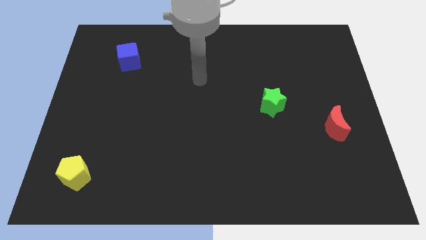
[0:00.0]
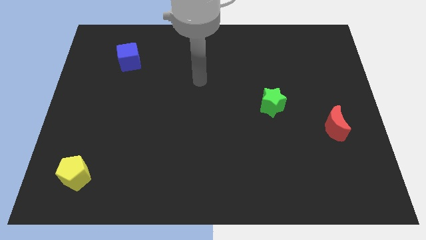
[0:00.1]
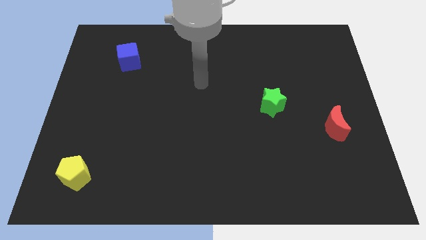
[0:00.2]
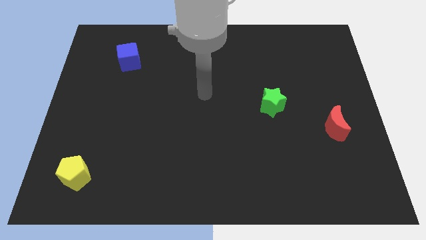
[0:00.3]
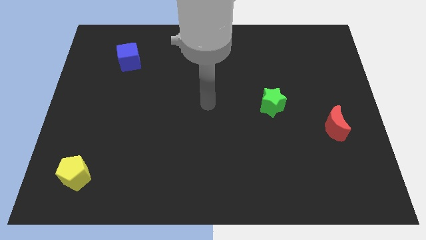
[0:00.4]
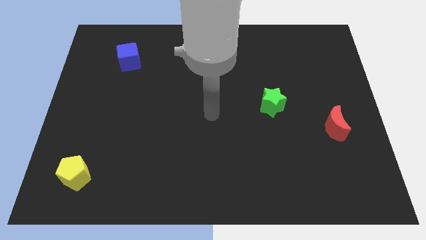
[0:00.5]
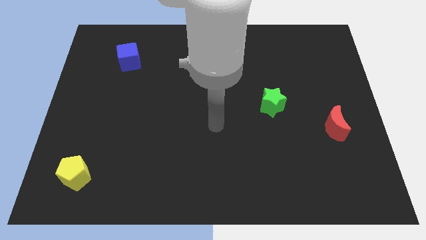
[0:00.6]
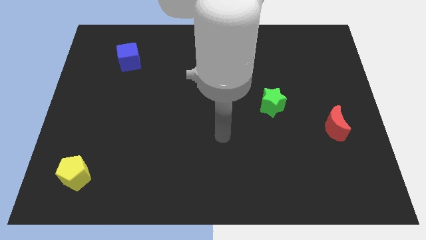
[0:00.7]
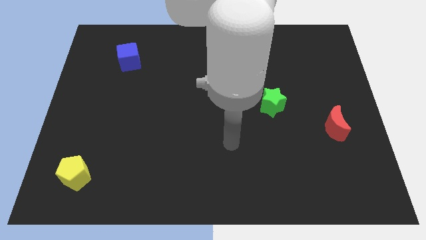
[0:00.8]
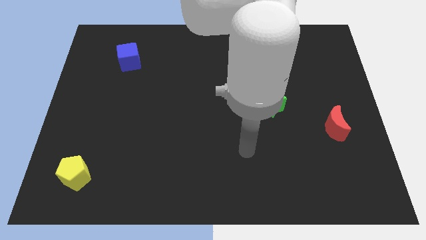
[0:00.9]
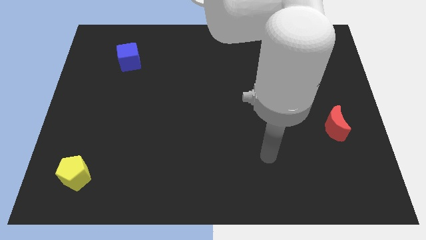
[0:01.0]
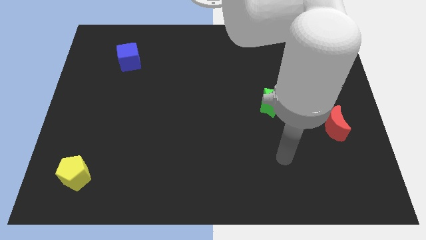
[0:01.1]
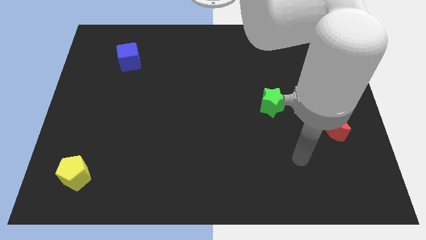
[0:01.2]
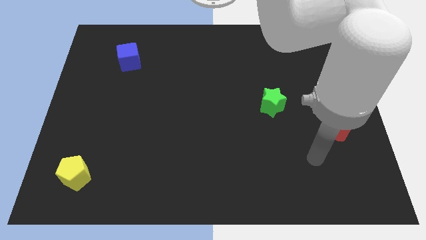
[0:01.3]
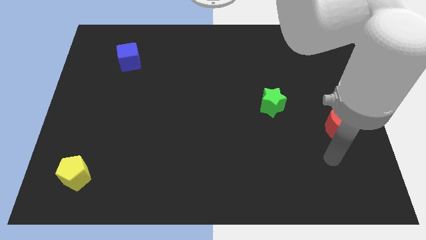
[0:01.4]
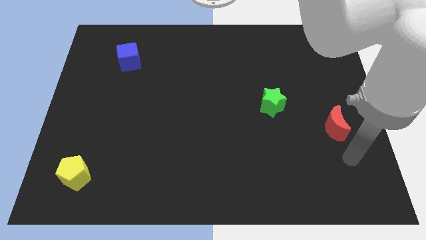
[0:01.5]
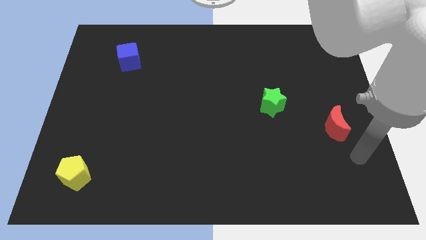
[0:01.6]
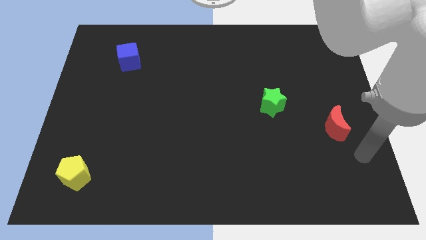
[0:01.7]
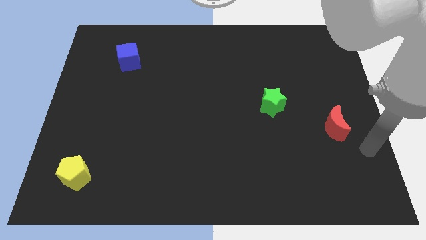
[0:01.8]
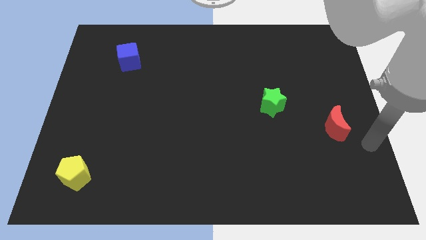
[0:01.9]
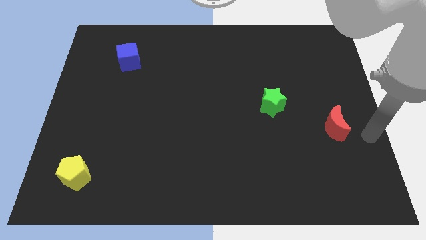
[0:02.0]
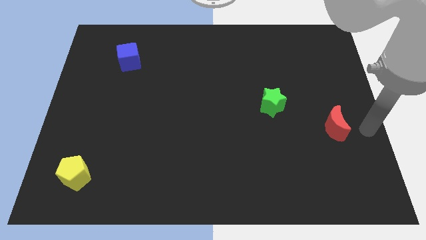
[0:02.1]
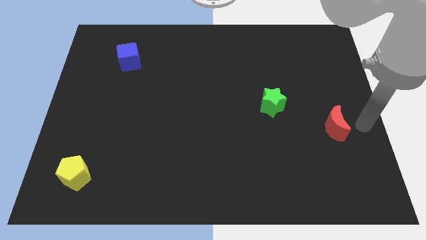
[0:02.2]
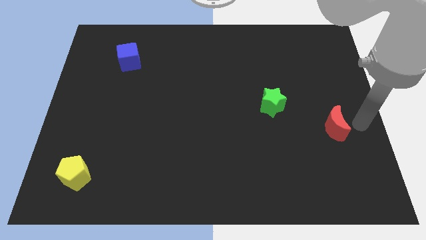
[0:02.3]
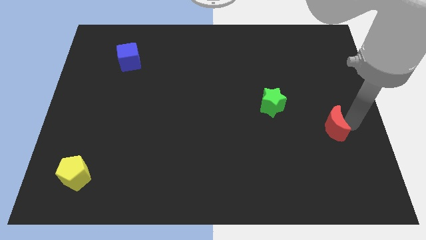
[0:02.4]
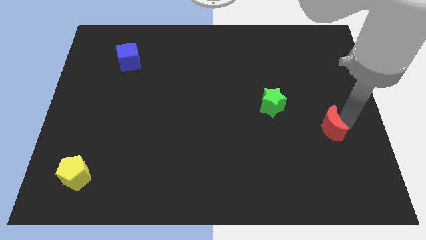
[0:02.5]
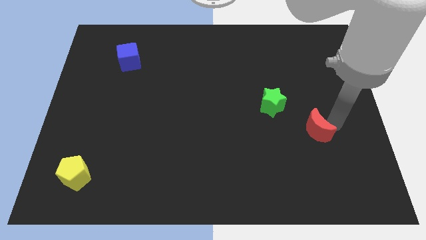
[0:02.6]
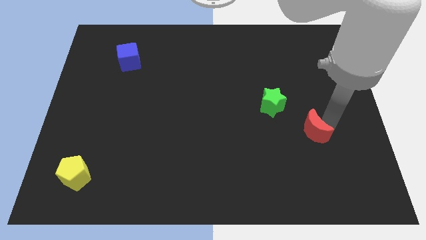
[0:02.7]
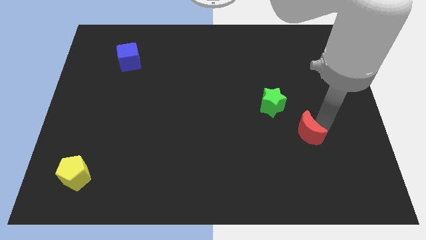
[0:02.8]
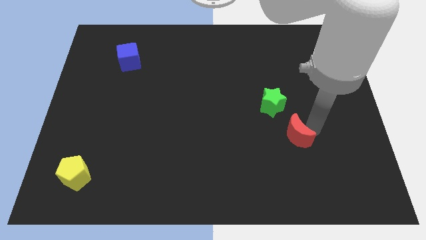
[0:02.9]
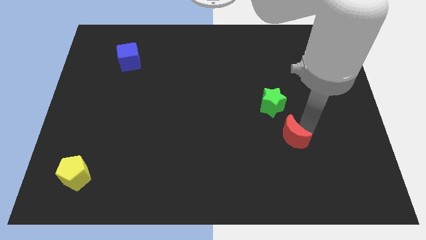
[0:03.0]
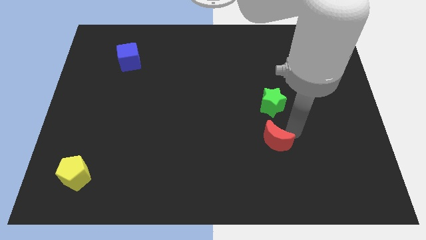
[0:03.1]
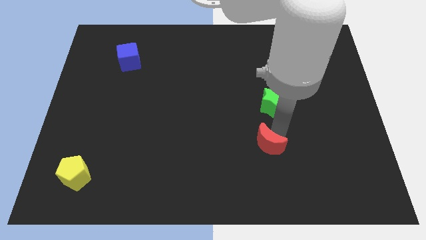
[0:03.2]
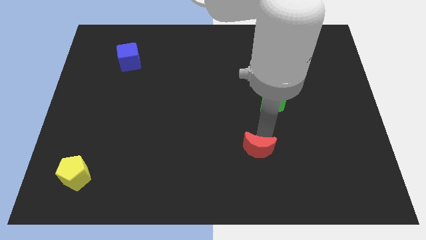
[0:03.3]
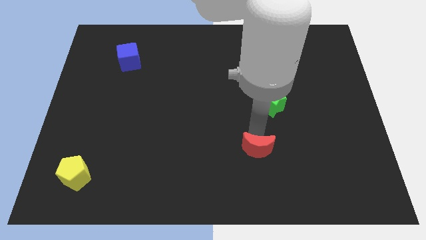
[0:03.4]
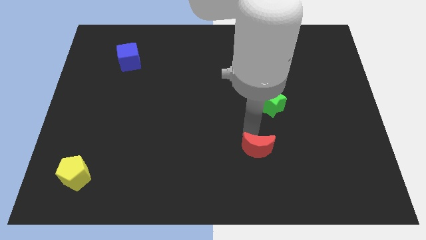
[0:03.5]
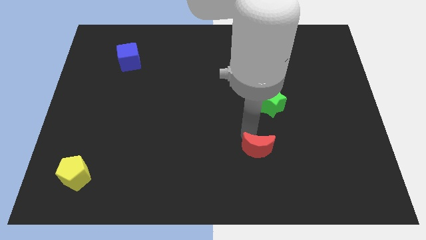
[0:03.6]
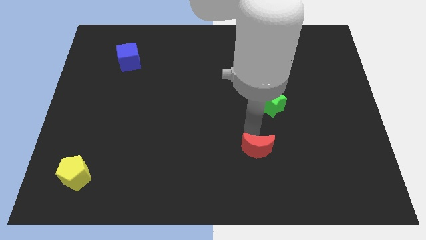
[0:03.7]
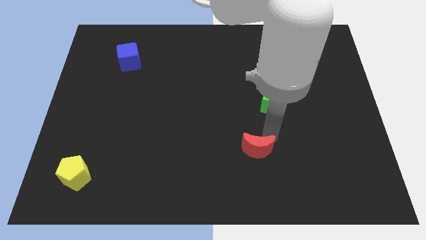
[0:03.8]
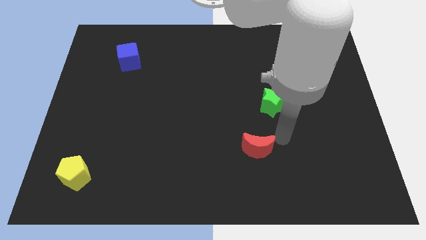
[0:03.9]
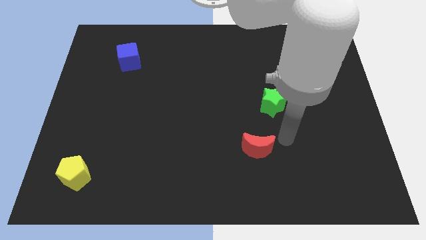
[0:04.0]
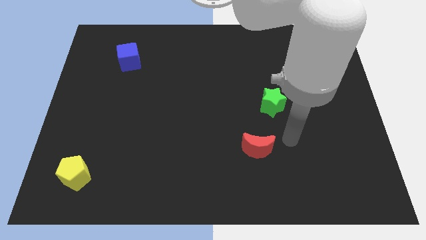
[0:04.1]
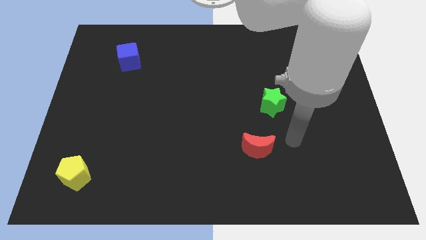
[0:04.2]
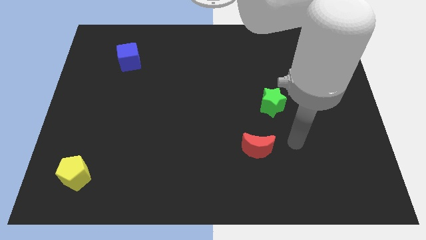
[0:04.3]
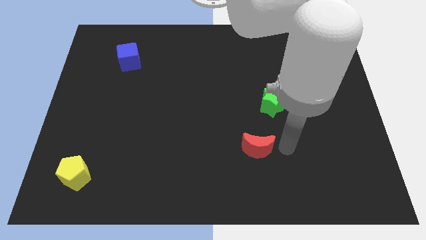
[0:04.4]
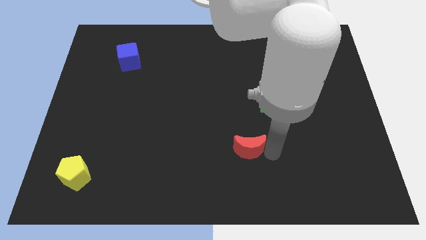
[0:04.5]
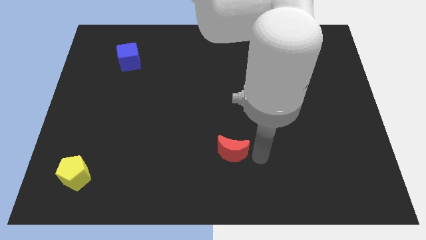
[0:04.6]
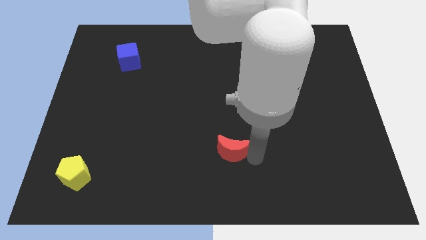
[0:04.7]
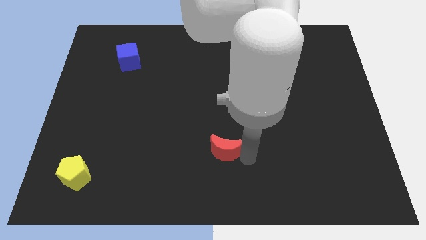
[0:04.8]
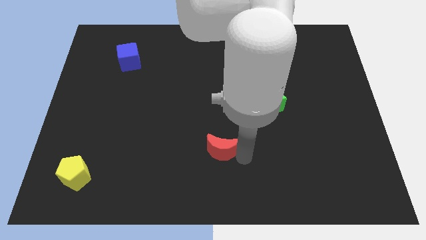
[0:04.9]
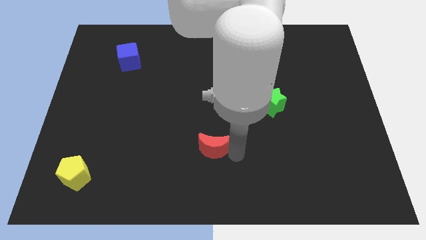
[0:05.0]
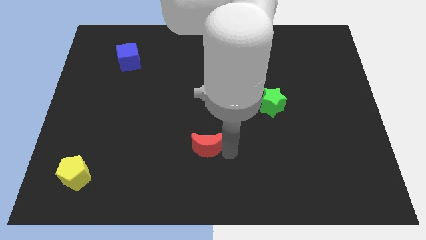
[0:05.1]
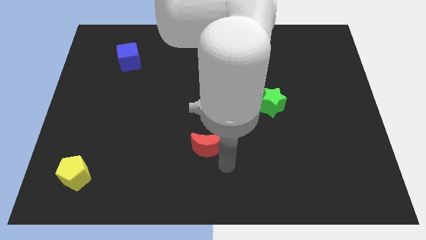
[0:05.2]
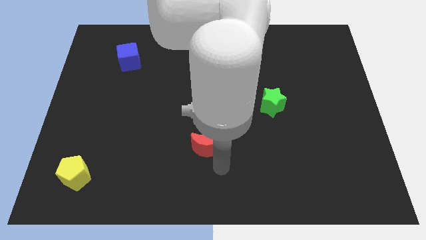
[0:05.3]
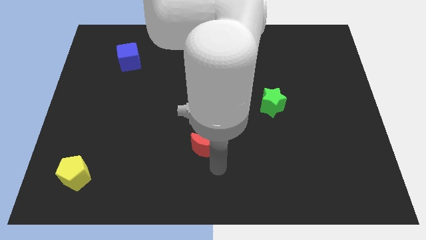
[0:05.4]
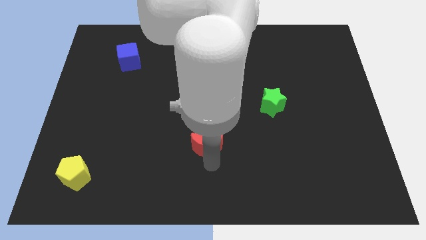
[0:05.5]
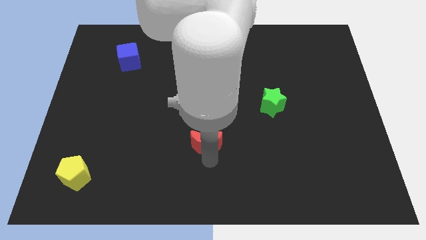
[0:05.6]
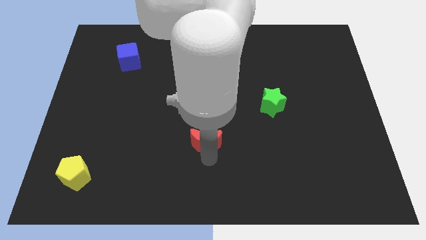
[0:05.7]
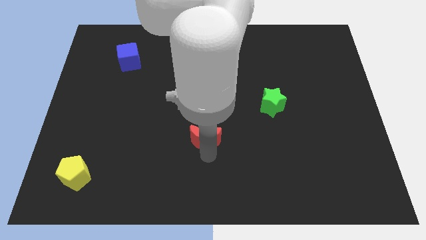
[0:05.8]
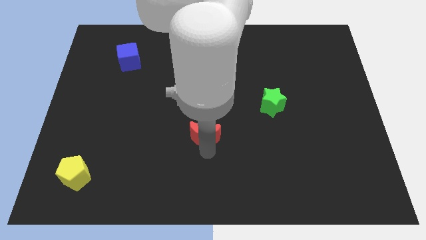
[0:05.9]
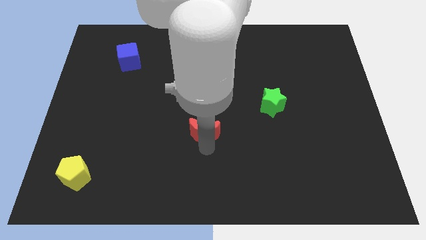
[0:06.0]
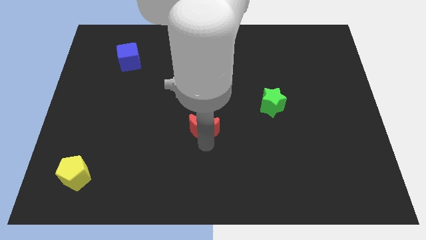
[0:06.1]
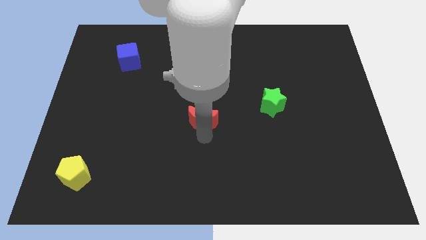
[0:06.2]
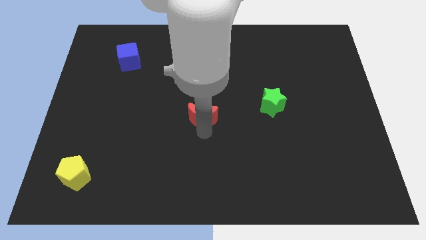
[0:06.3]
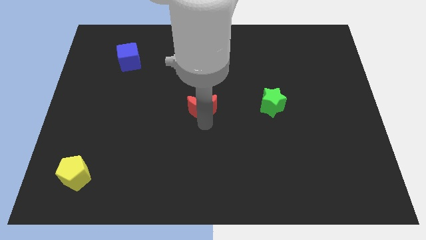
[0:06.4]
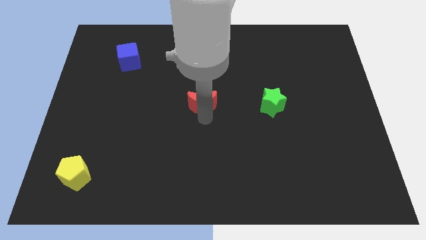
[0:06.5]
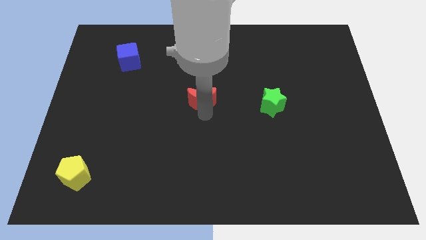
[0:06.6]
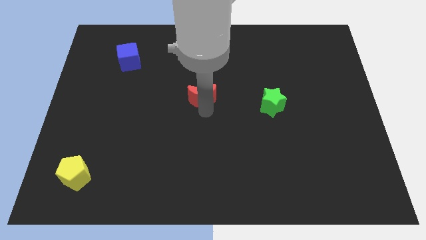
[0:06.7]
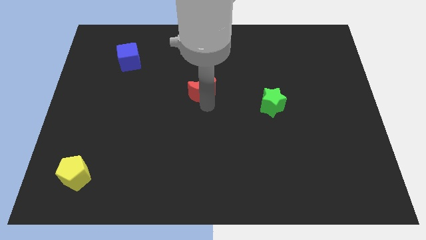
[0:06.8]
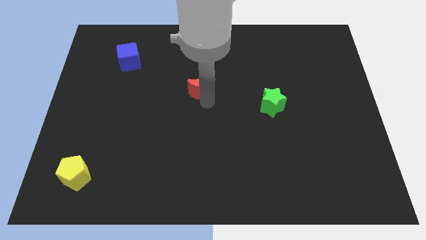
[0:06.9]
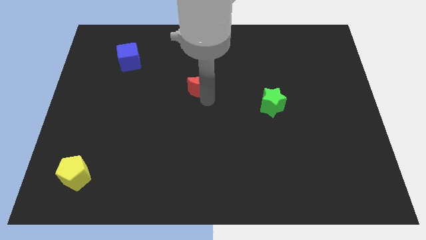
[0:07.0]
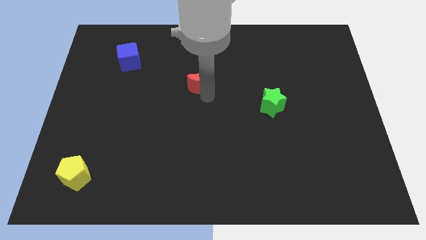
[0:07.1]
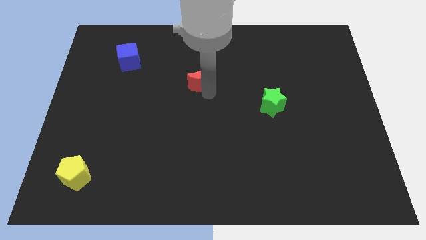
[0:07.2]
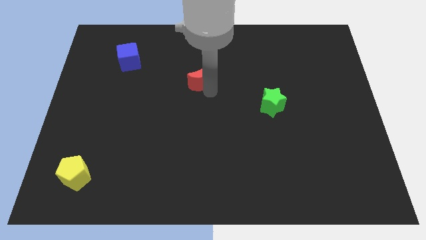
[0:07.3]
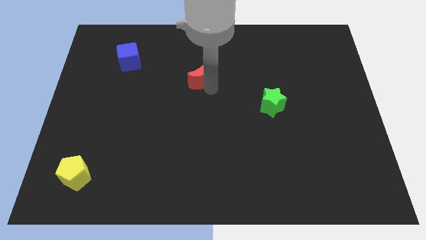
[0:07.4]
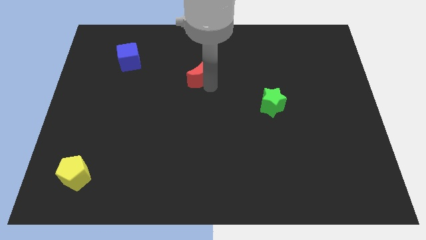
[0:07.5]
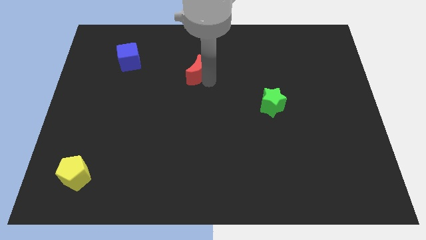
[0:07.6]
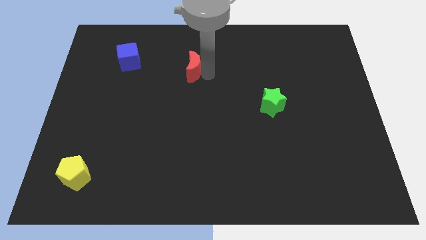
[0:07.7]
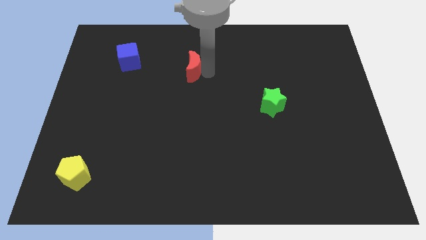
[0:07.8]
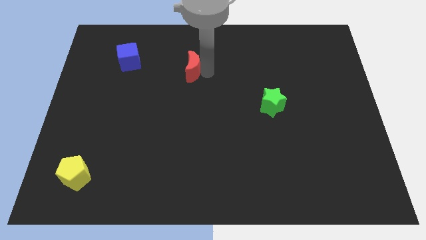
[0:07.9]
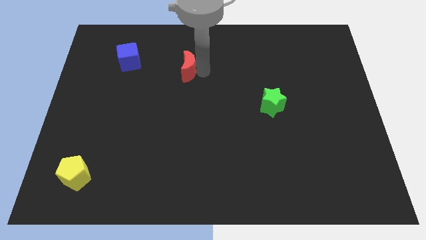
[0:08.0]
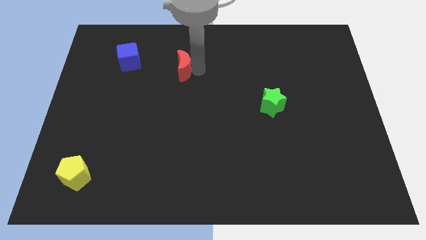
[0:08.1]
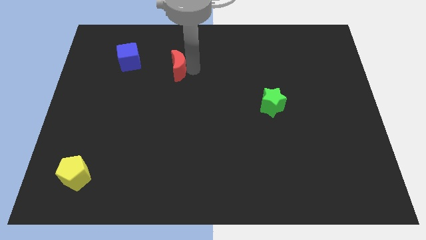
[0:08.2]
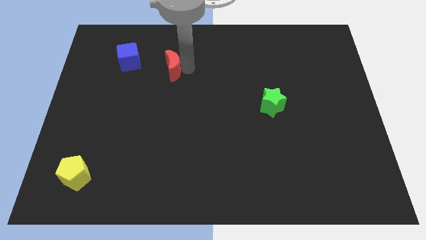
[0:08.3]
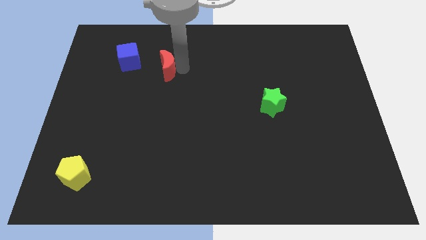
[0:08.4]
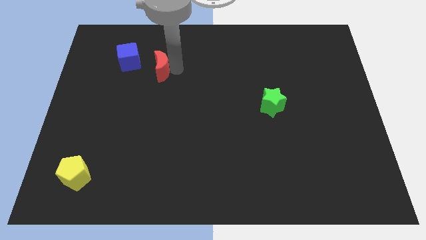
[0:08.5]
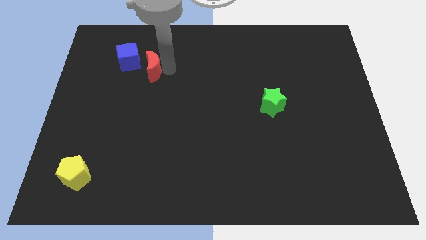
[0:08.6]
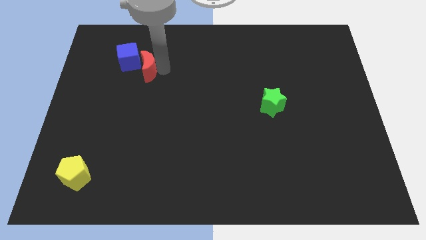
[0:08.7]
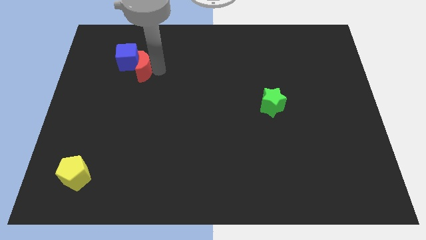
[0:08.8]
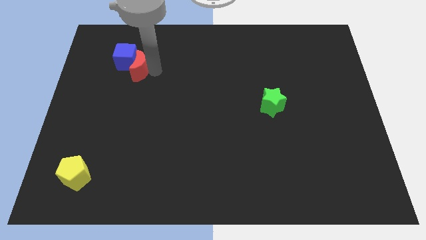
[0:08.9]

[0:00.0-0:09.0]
push the moon close to the blue block
